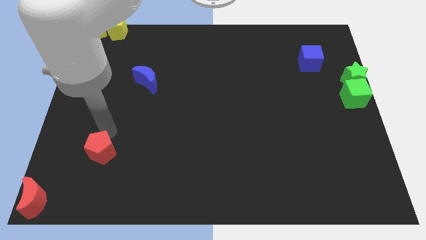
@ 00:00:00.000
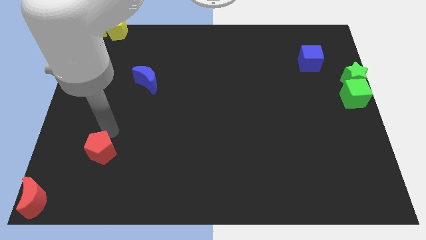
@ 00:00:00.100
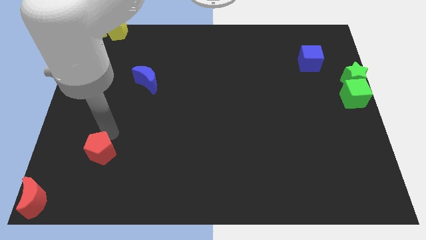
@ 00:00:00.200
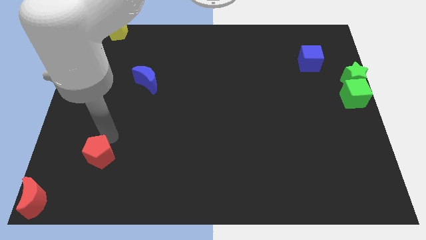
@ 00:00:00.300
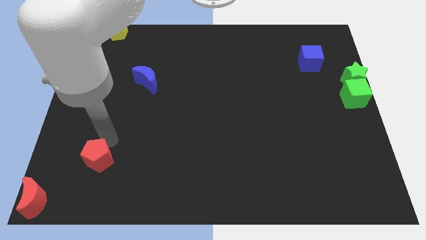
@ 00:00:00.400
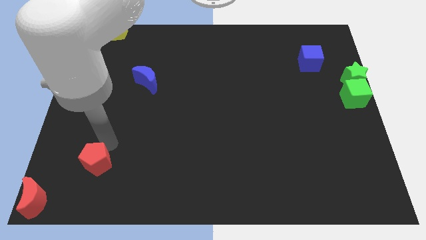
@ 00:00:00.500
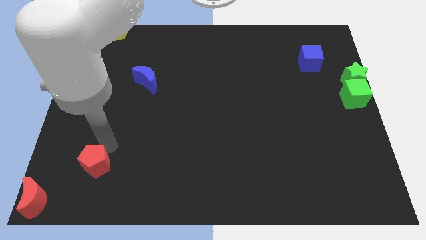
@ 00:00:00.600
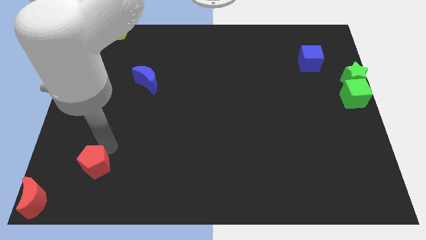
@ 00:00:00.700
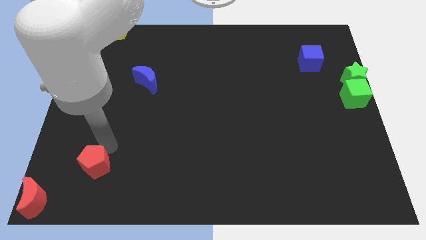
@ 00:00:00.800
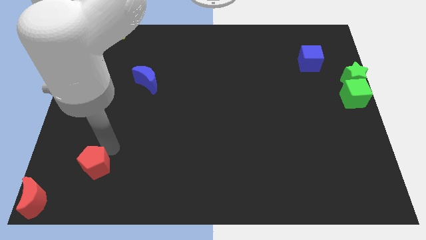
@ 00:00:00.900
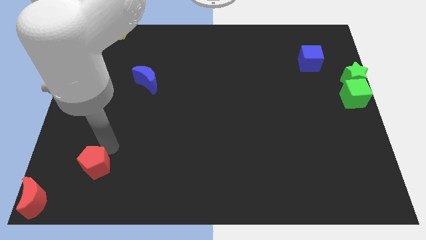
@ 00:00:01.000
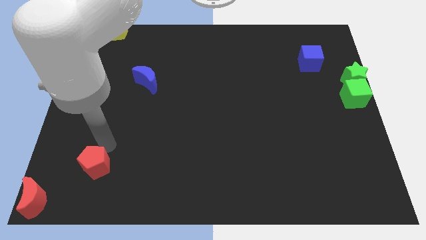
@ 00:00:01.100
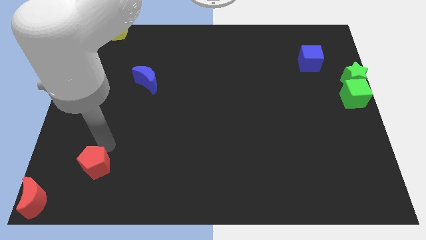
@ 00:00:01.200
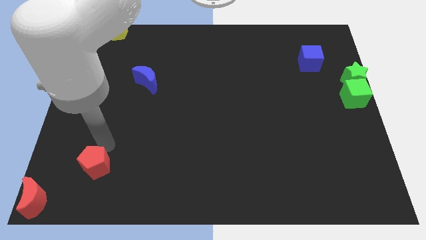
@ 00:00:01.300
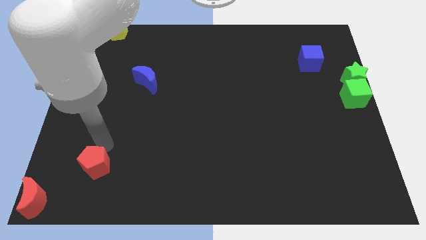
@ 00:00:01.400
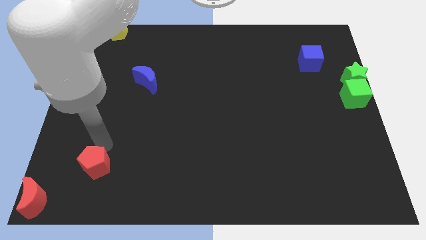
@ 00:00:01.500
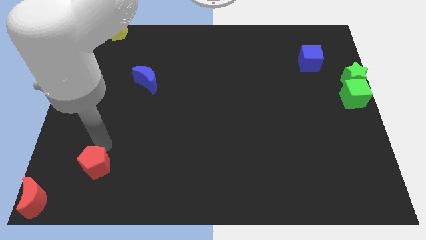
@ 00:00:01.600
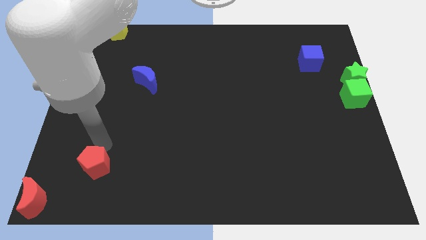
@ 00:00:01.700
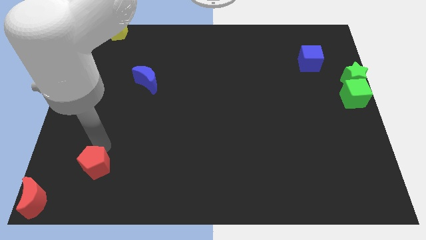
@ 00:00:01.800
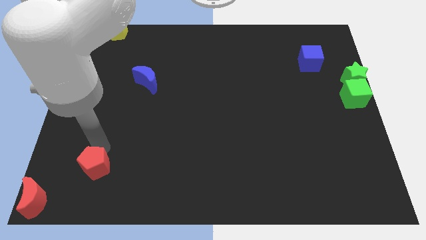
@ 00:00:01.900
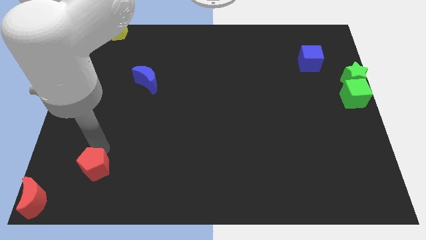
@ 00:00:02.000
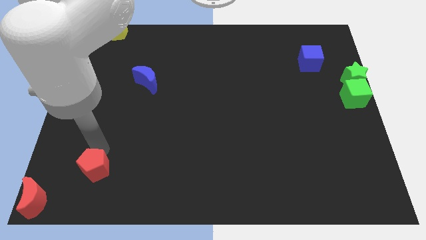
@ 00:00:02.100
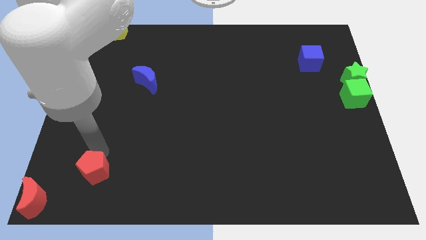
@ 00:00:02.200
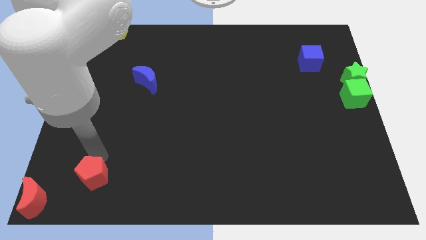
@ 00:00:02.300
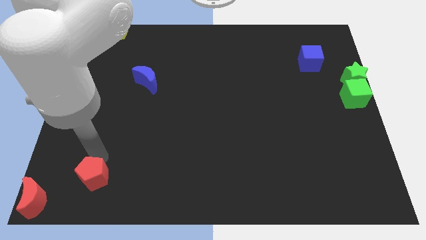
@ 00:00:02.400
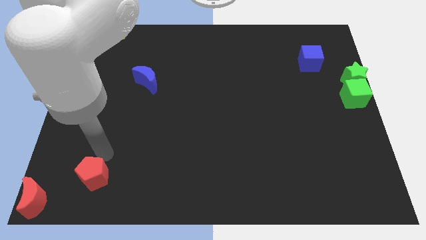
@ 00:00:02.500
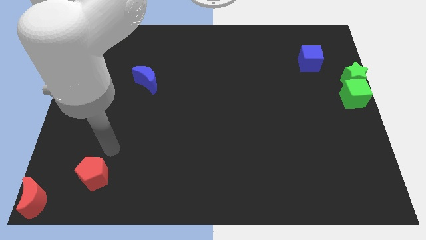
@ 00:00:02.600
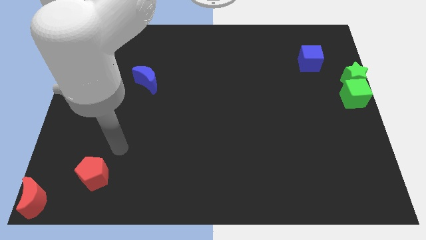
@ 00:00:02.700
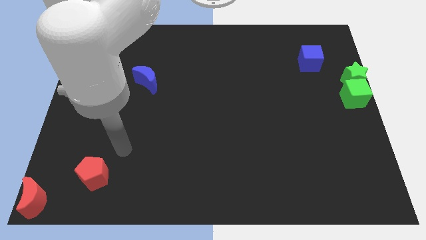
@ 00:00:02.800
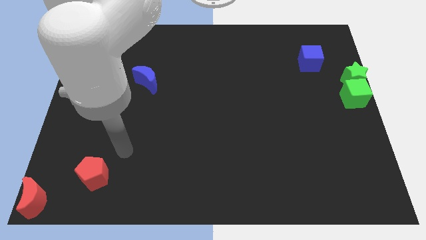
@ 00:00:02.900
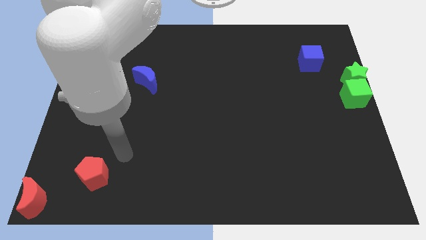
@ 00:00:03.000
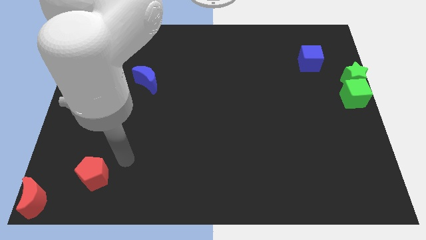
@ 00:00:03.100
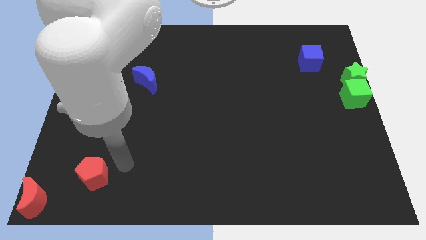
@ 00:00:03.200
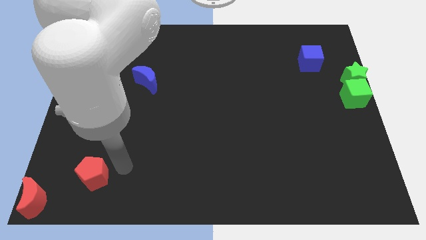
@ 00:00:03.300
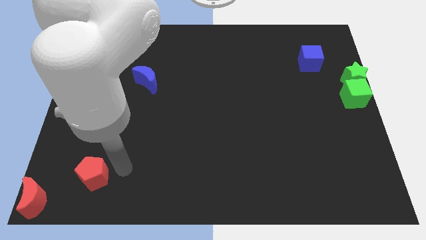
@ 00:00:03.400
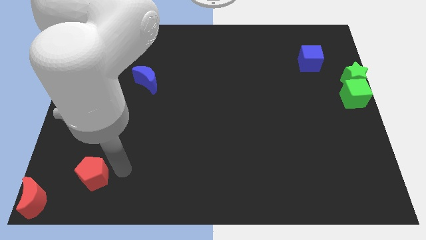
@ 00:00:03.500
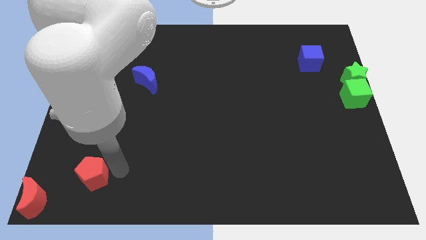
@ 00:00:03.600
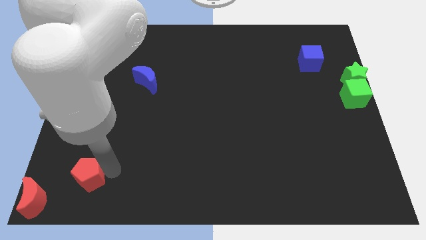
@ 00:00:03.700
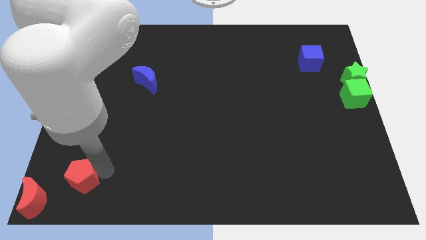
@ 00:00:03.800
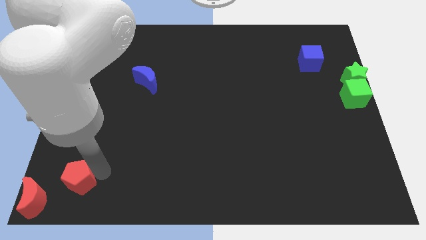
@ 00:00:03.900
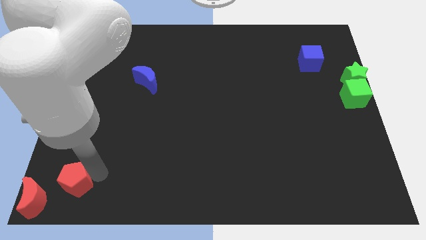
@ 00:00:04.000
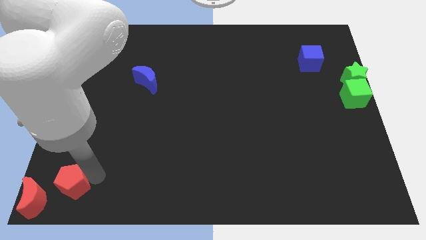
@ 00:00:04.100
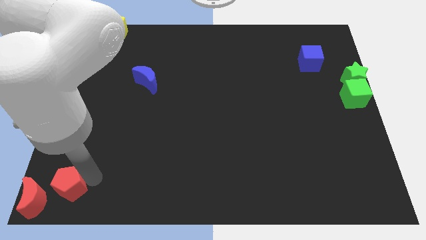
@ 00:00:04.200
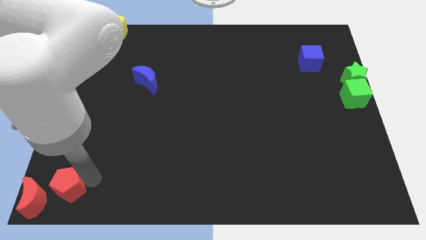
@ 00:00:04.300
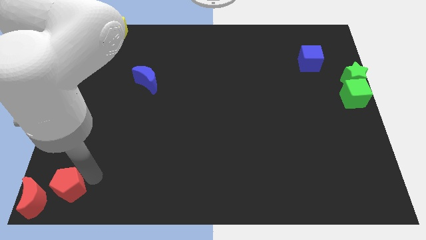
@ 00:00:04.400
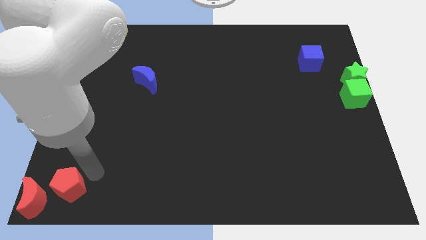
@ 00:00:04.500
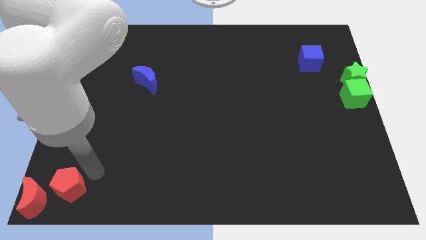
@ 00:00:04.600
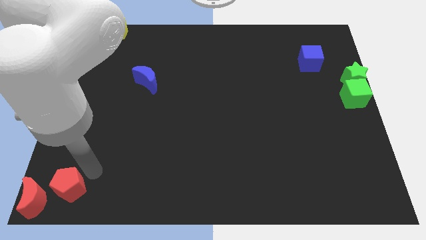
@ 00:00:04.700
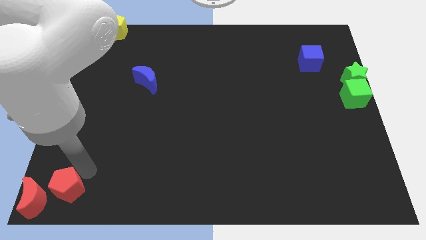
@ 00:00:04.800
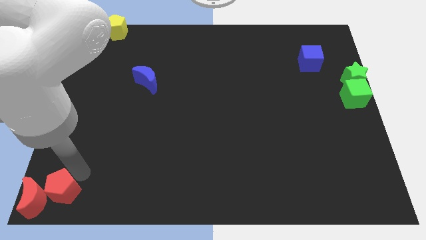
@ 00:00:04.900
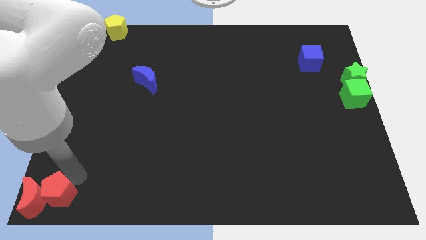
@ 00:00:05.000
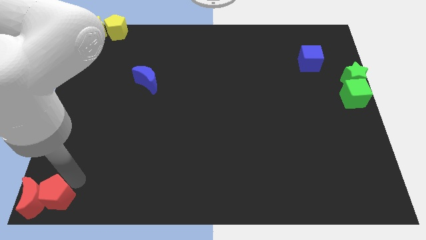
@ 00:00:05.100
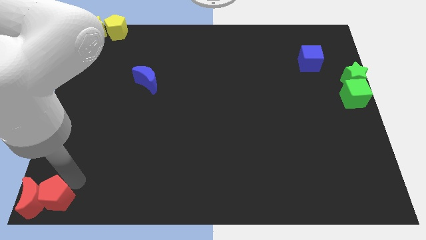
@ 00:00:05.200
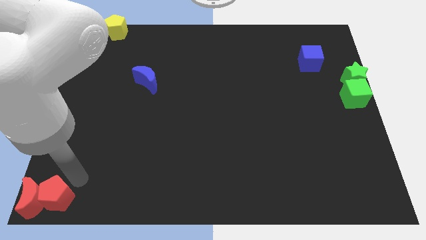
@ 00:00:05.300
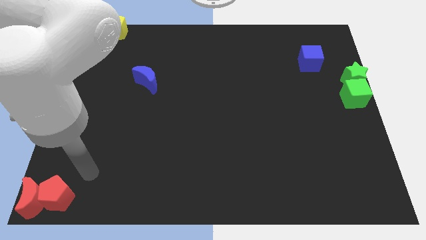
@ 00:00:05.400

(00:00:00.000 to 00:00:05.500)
place the red pentagon right to the red crescent

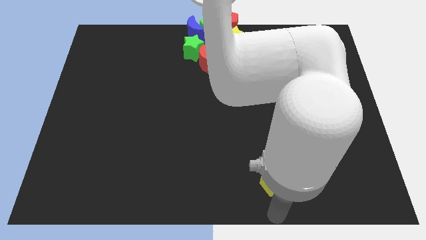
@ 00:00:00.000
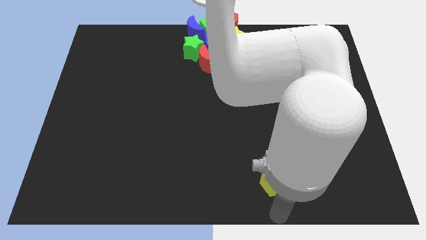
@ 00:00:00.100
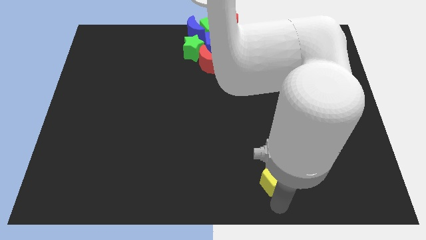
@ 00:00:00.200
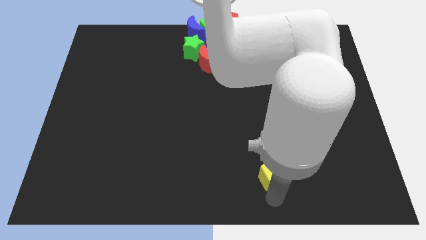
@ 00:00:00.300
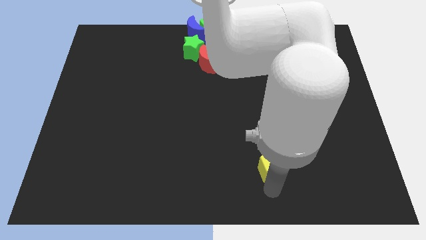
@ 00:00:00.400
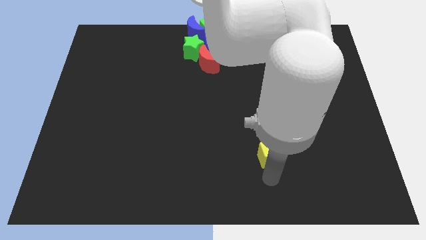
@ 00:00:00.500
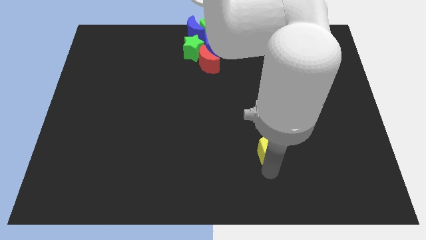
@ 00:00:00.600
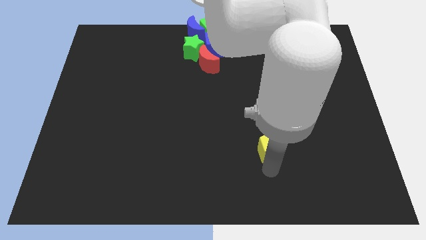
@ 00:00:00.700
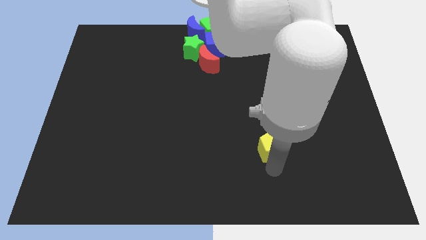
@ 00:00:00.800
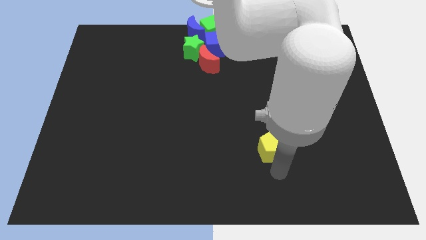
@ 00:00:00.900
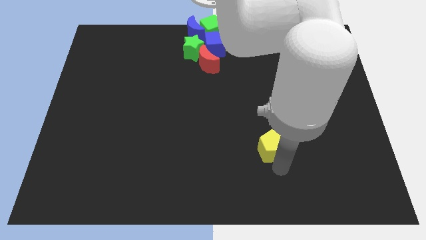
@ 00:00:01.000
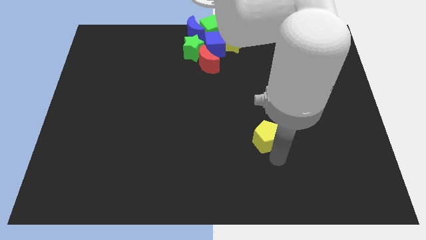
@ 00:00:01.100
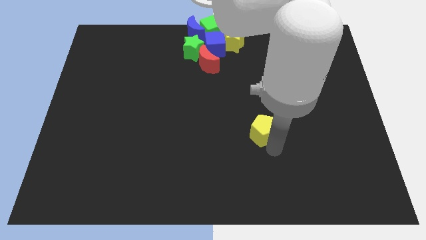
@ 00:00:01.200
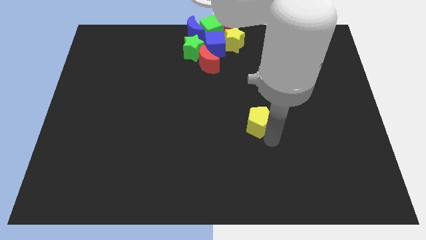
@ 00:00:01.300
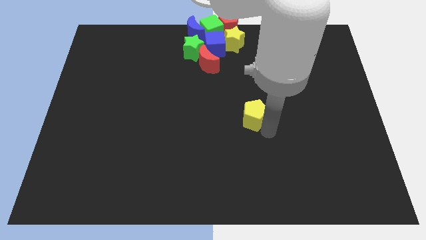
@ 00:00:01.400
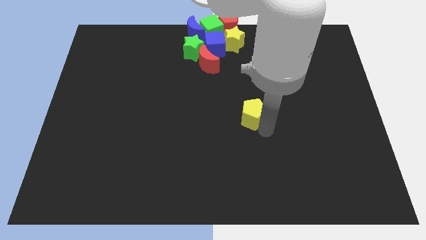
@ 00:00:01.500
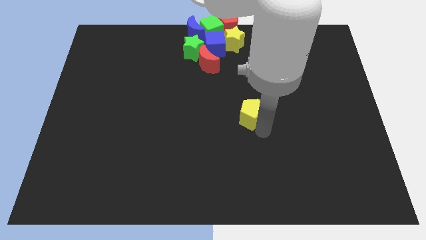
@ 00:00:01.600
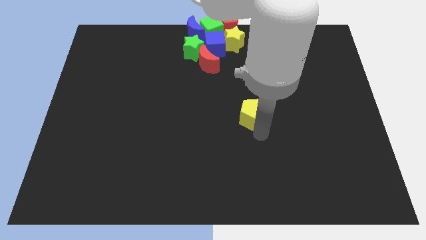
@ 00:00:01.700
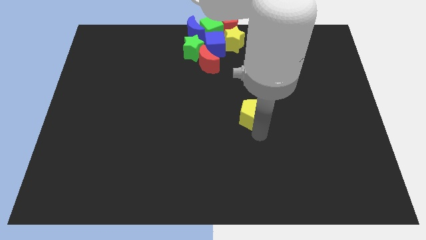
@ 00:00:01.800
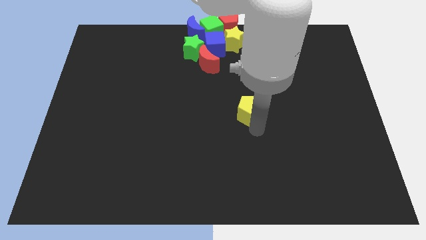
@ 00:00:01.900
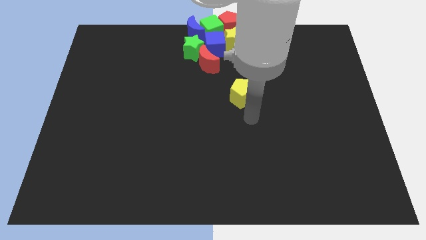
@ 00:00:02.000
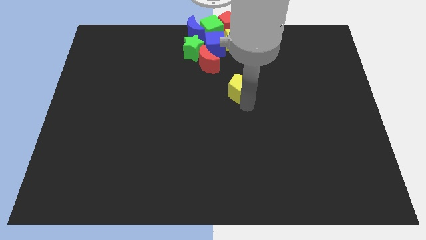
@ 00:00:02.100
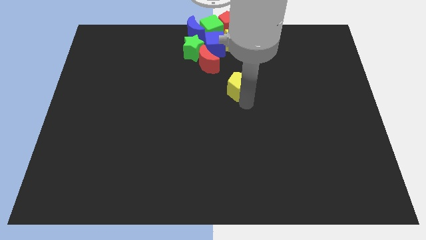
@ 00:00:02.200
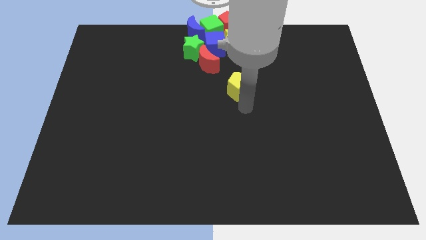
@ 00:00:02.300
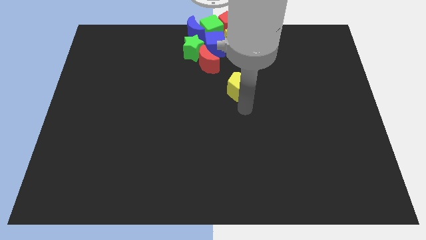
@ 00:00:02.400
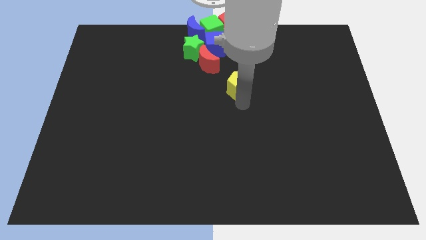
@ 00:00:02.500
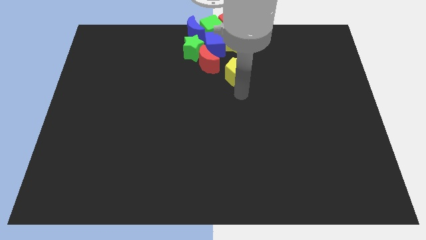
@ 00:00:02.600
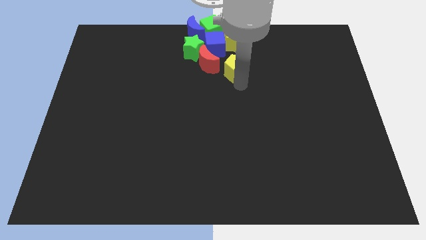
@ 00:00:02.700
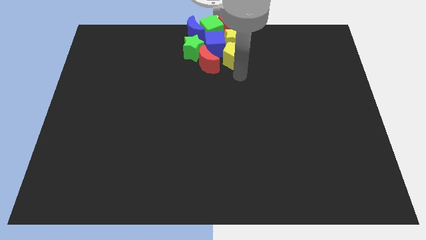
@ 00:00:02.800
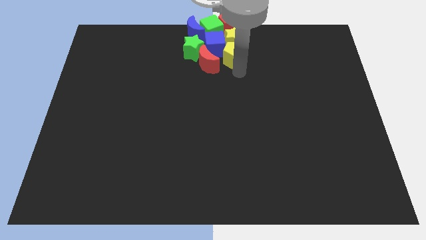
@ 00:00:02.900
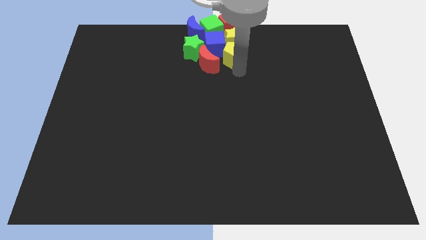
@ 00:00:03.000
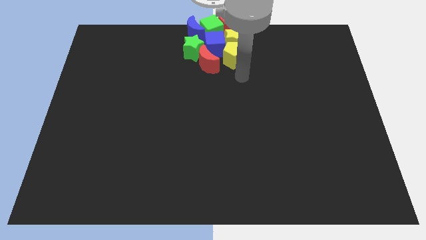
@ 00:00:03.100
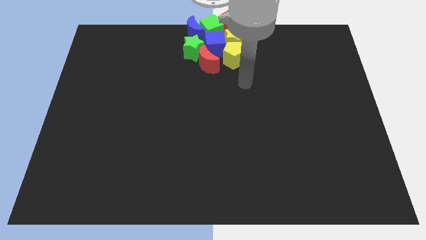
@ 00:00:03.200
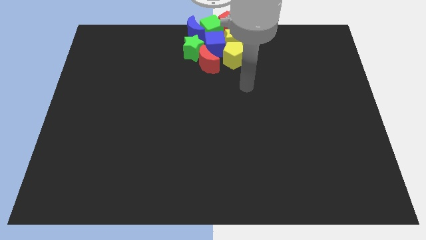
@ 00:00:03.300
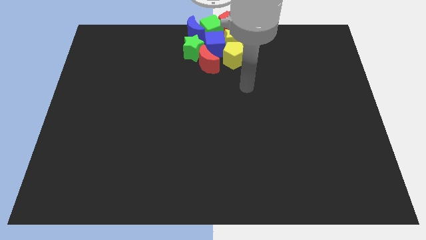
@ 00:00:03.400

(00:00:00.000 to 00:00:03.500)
push the yellow pentagon into the group of blocks
